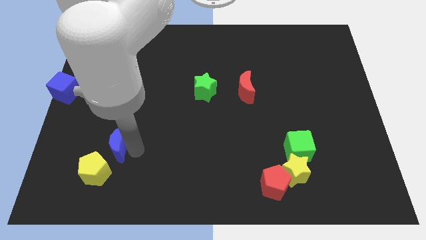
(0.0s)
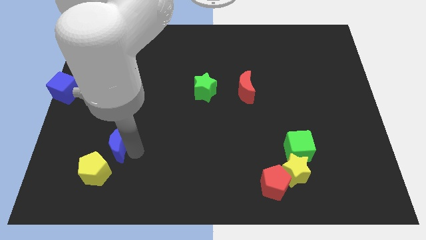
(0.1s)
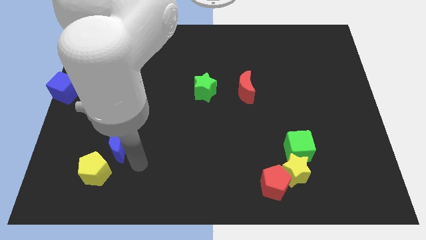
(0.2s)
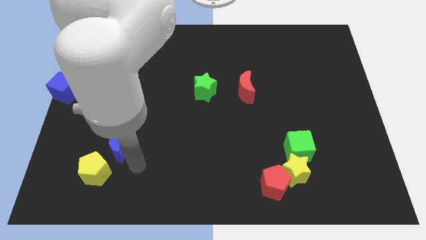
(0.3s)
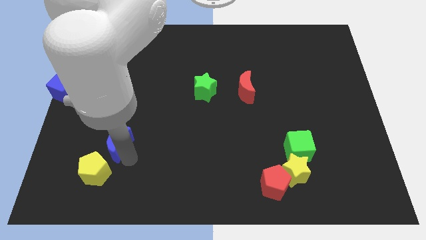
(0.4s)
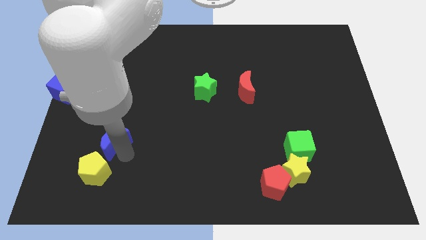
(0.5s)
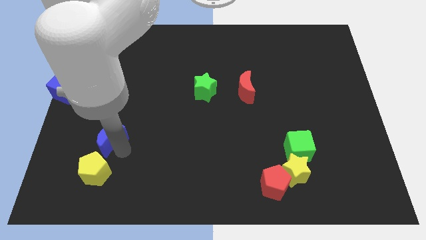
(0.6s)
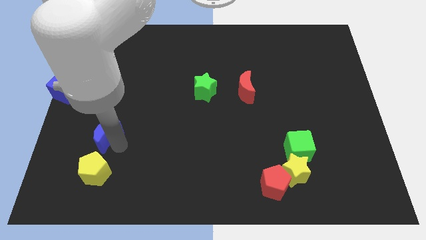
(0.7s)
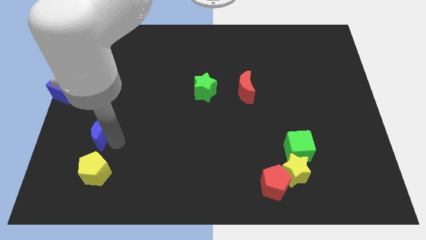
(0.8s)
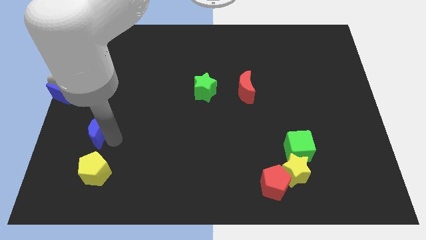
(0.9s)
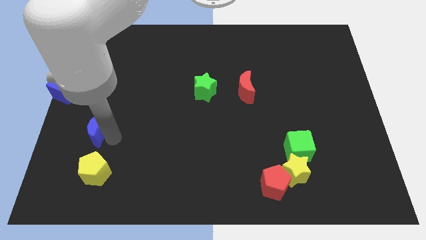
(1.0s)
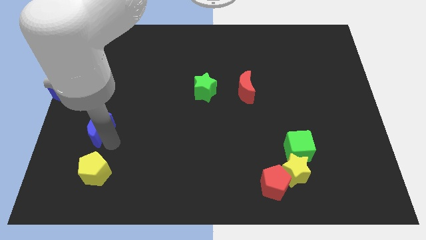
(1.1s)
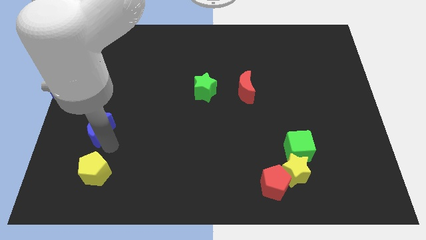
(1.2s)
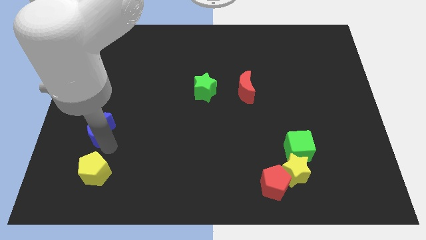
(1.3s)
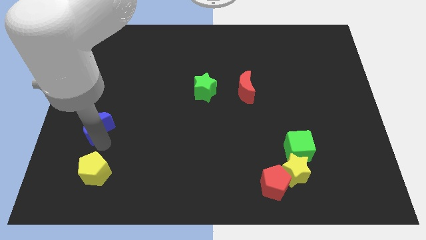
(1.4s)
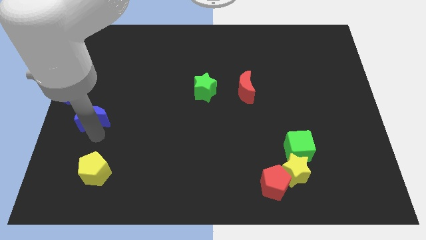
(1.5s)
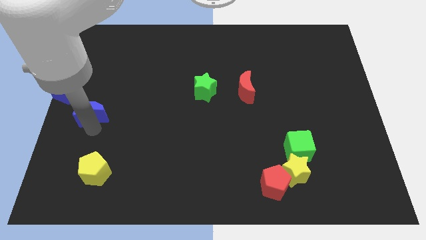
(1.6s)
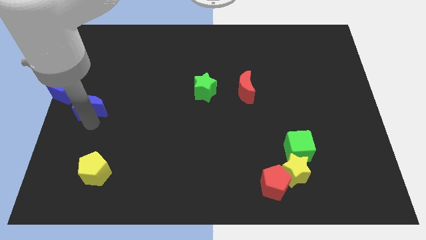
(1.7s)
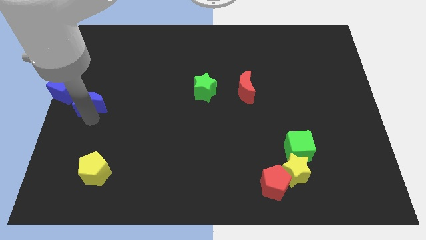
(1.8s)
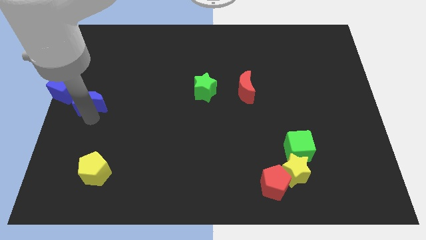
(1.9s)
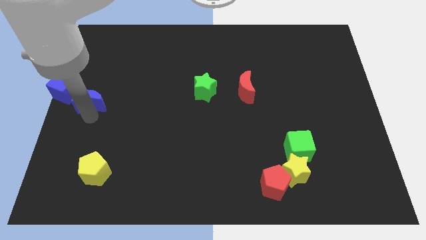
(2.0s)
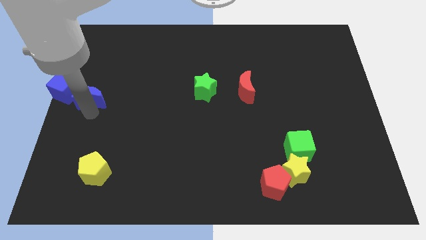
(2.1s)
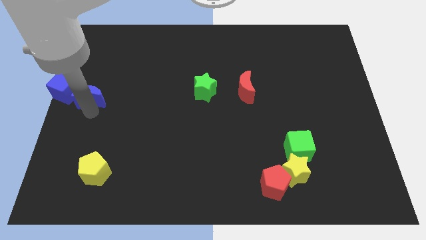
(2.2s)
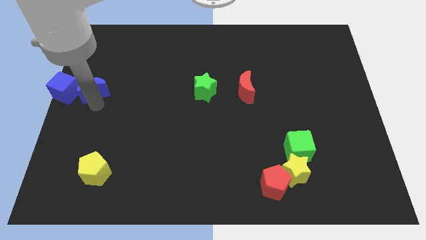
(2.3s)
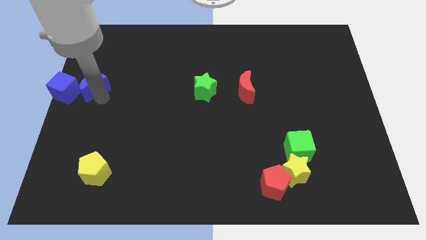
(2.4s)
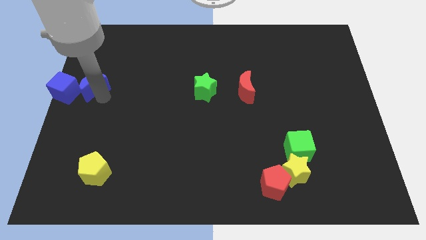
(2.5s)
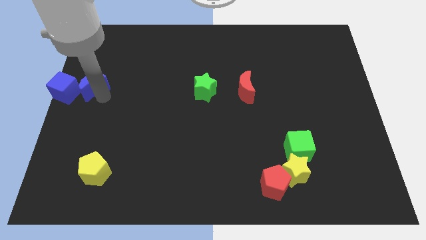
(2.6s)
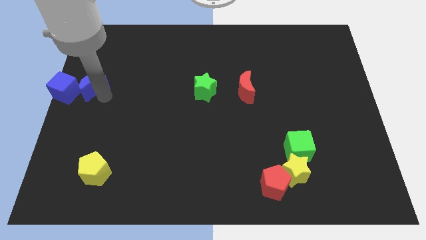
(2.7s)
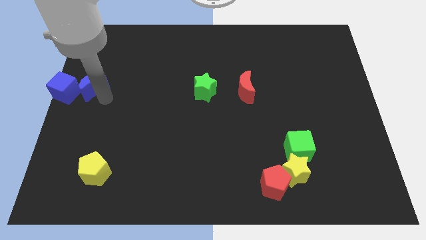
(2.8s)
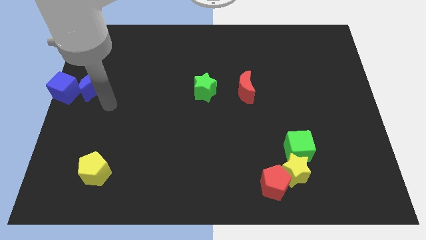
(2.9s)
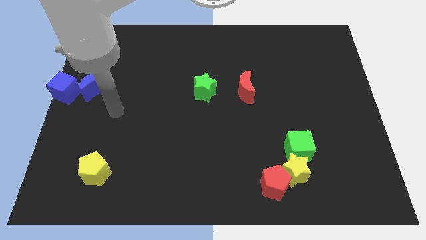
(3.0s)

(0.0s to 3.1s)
put the blue moon to the right of blue cube

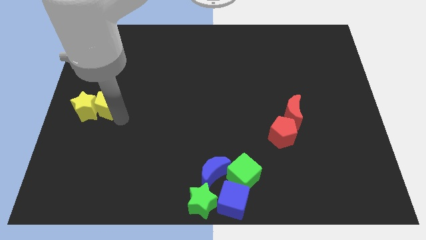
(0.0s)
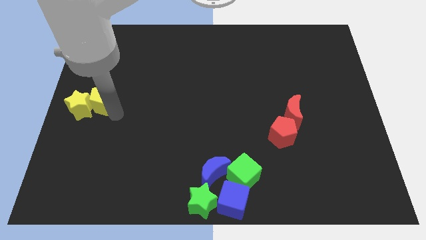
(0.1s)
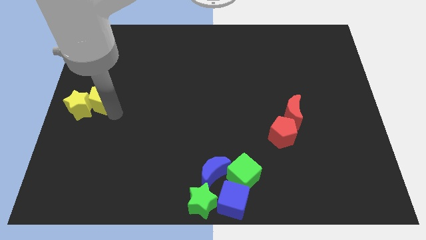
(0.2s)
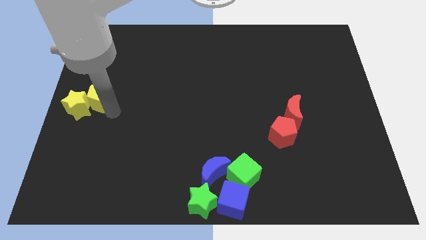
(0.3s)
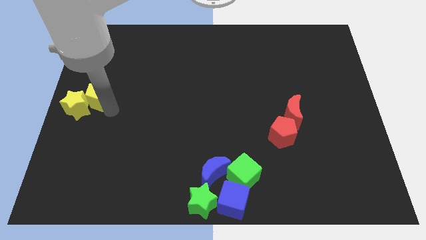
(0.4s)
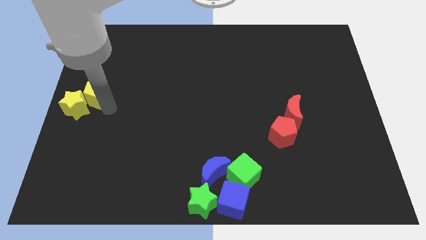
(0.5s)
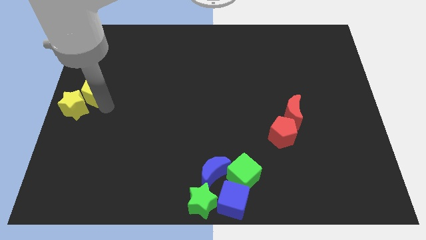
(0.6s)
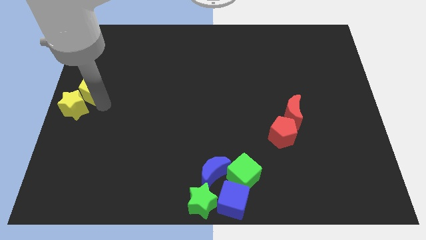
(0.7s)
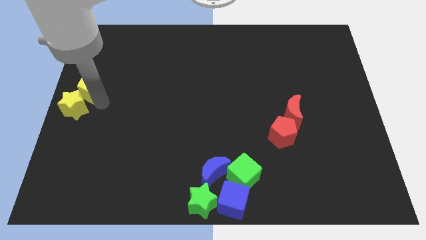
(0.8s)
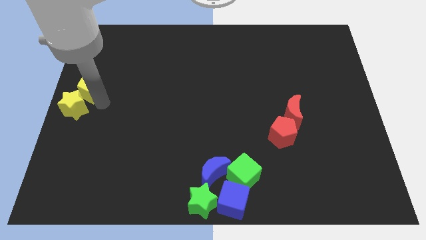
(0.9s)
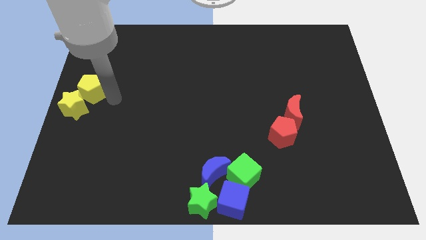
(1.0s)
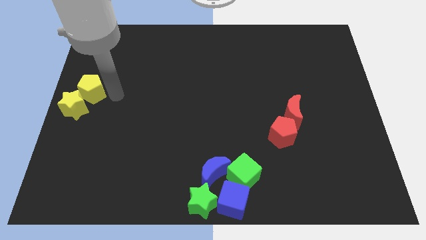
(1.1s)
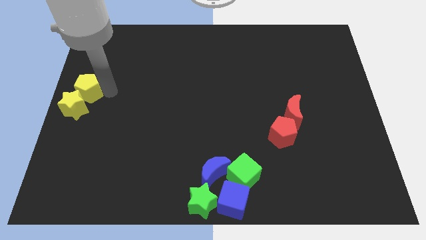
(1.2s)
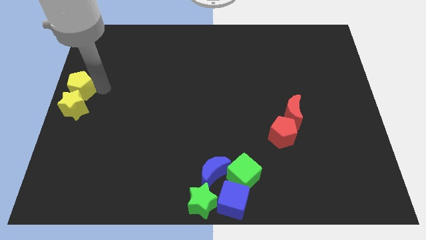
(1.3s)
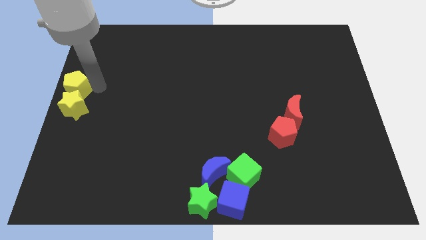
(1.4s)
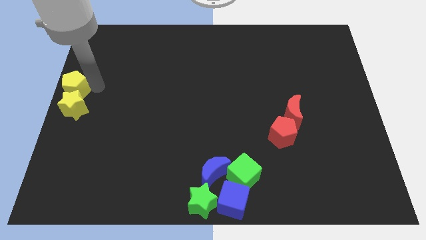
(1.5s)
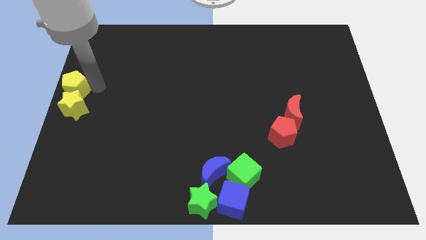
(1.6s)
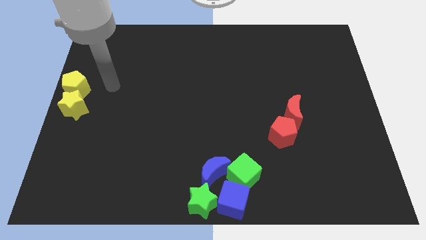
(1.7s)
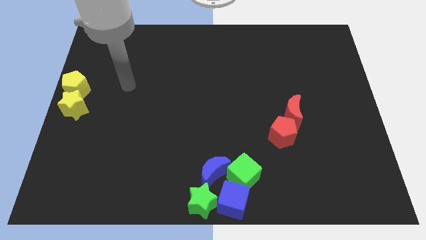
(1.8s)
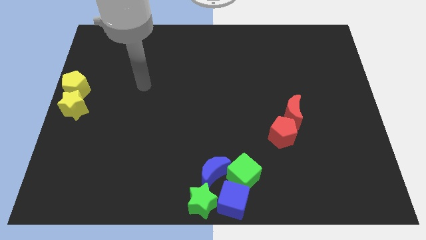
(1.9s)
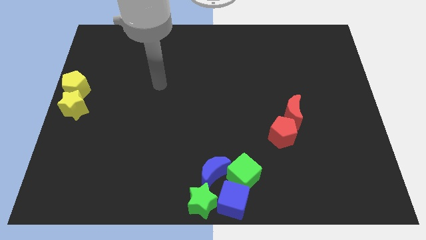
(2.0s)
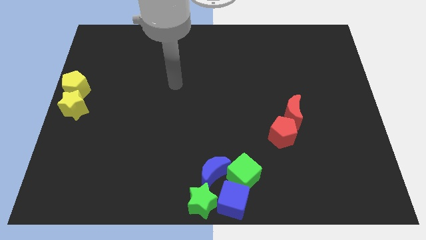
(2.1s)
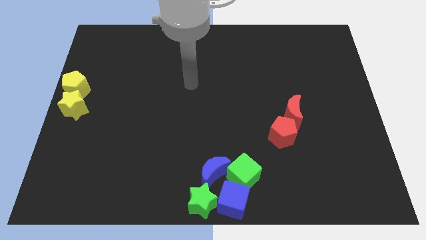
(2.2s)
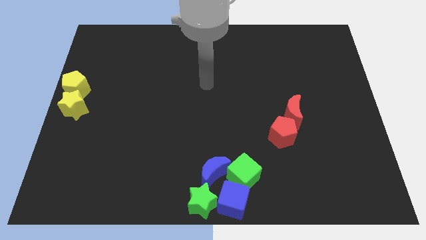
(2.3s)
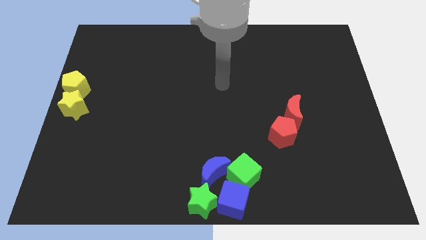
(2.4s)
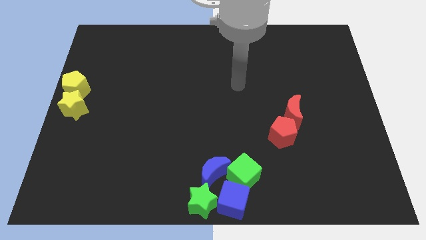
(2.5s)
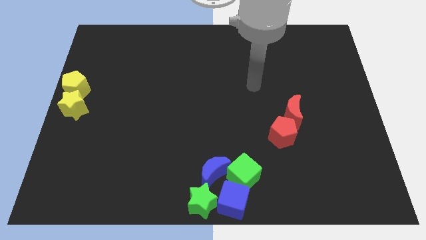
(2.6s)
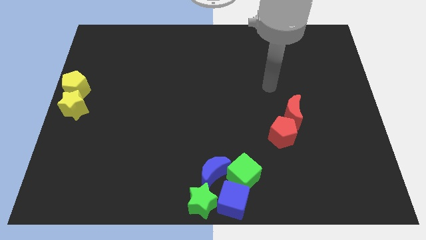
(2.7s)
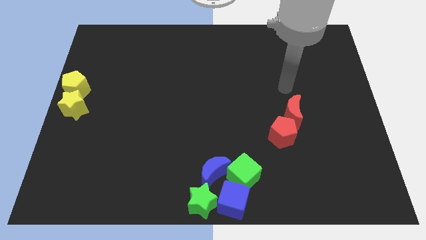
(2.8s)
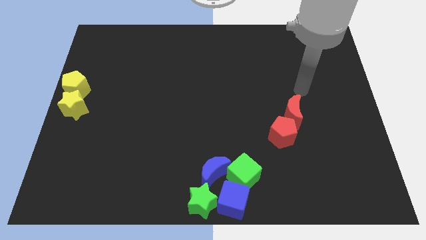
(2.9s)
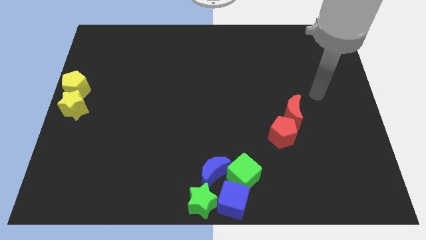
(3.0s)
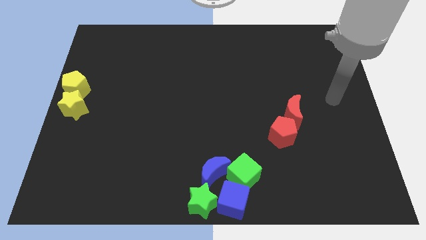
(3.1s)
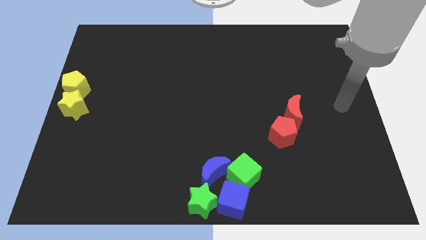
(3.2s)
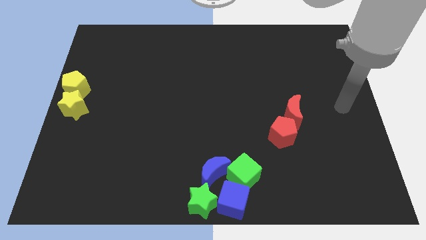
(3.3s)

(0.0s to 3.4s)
place the yellow pentagon above the yellow star

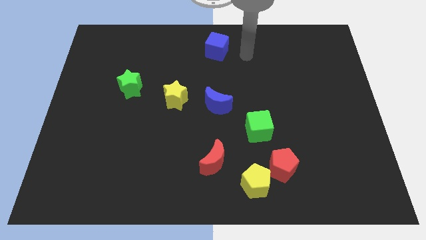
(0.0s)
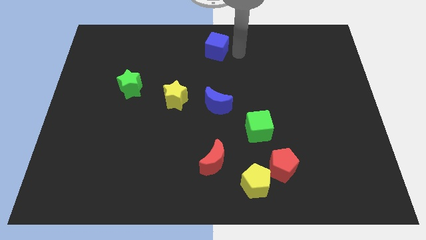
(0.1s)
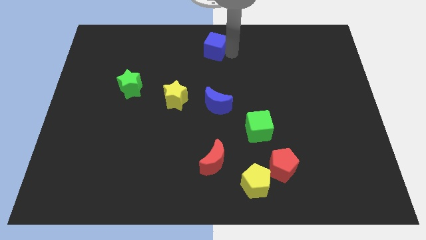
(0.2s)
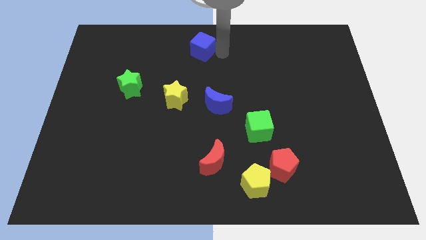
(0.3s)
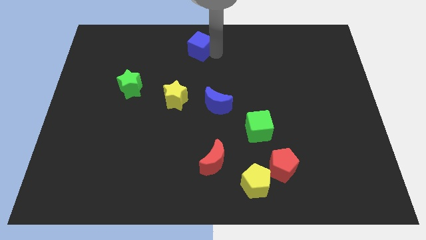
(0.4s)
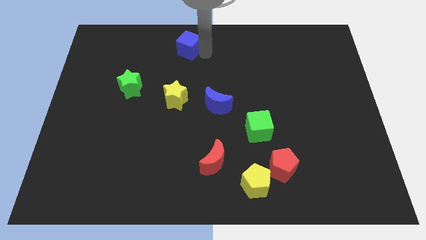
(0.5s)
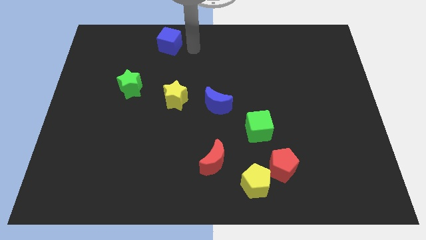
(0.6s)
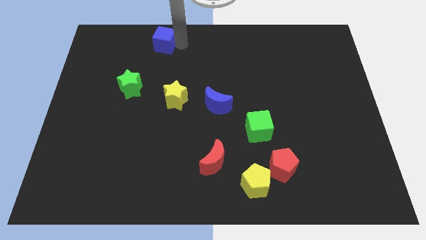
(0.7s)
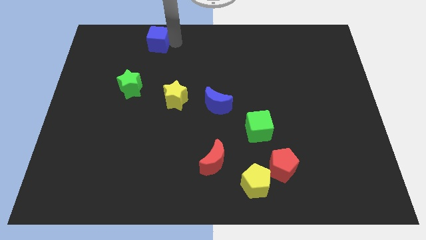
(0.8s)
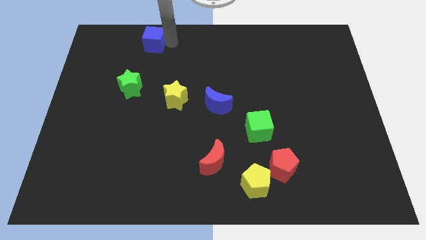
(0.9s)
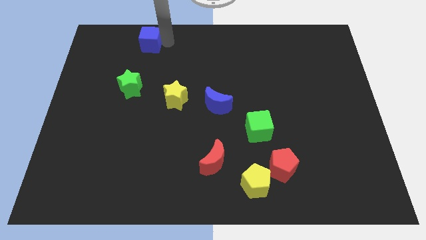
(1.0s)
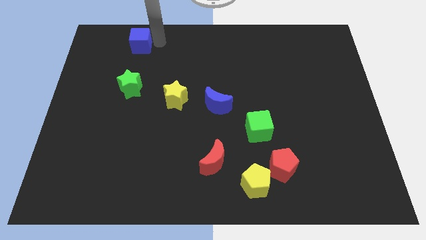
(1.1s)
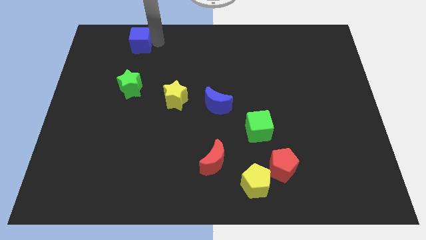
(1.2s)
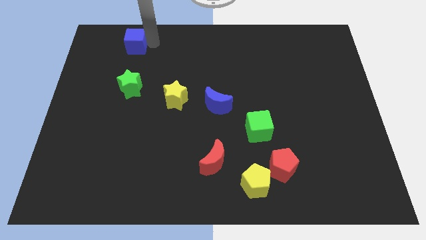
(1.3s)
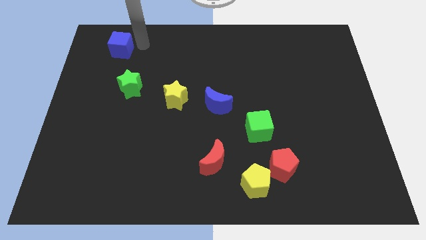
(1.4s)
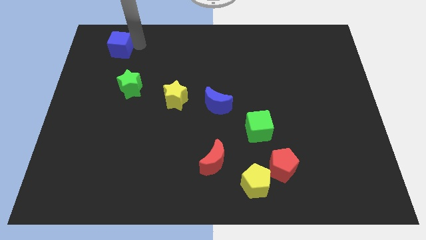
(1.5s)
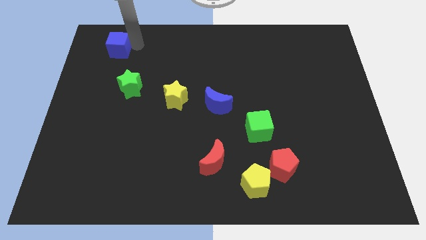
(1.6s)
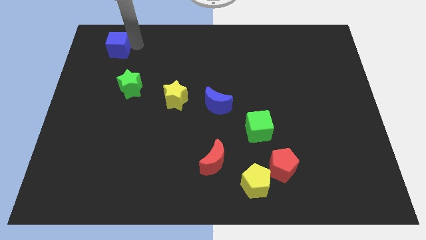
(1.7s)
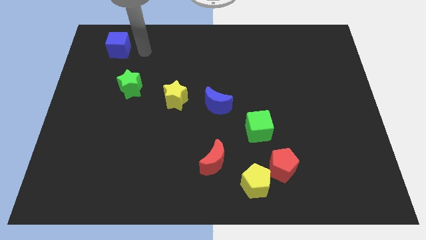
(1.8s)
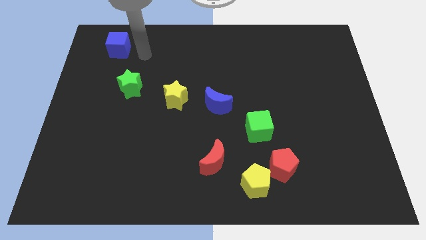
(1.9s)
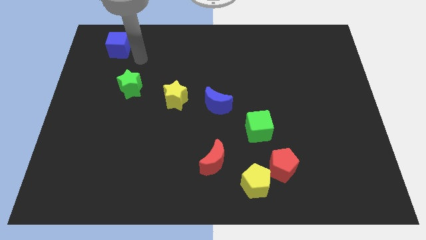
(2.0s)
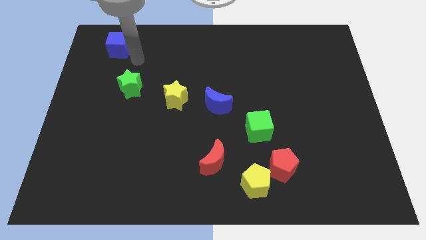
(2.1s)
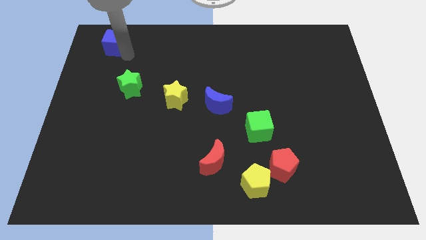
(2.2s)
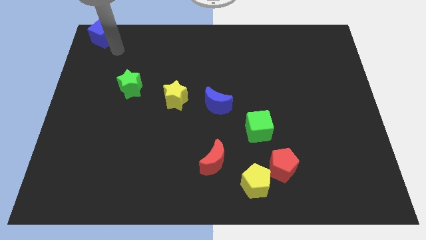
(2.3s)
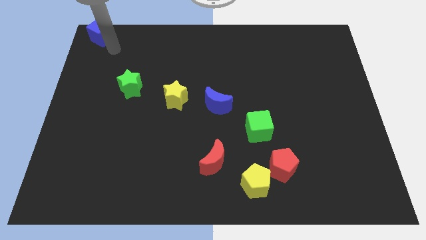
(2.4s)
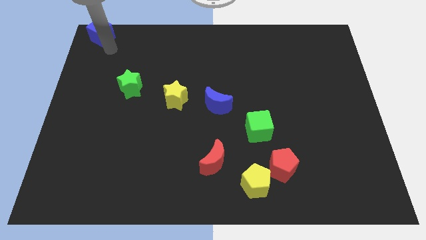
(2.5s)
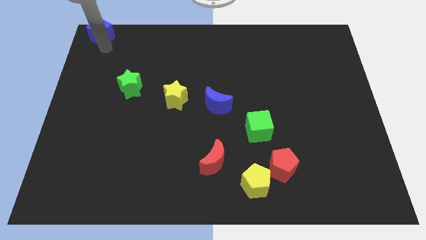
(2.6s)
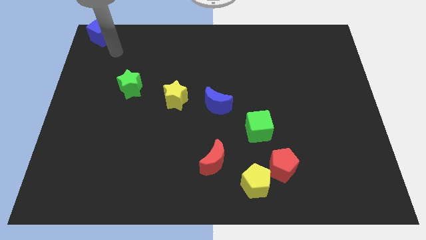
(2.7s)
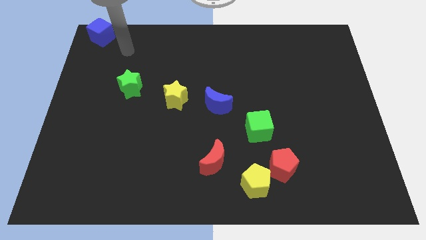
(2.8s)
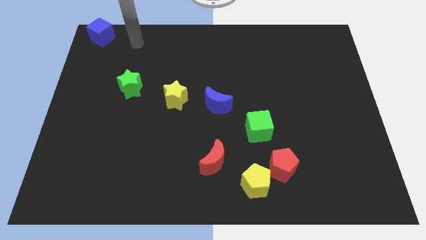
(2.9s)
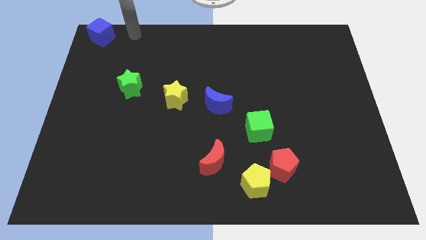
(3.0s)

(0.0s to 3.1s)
move the blue cube to the top left
